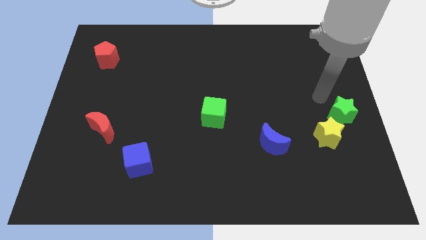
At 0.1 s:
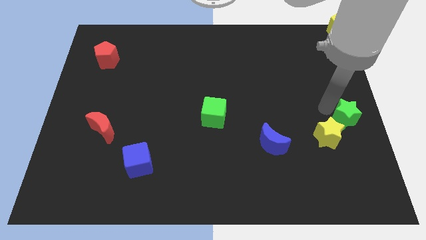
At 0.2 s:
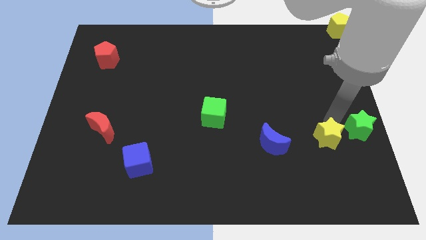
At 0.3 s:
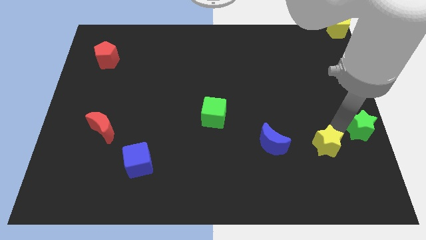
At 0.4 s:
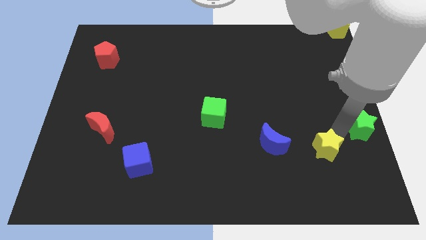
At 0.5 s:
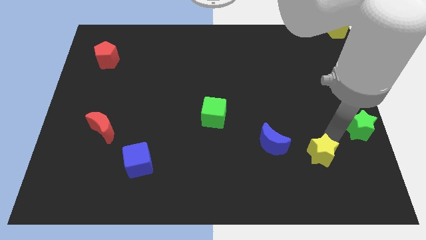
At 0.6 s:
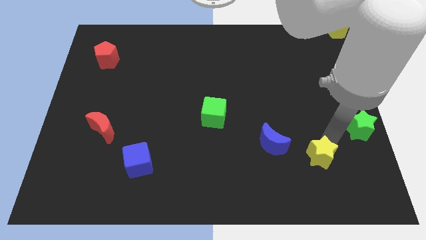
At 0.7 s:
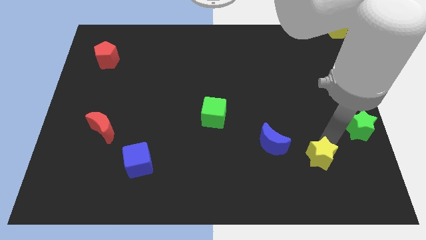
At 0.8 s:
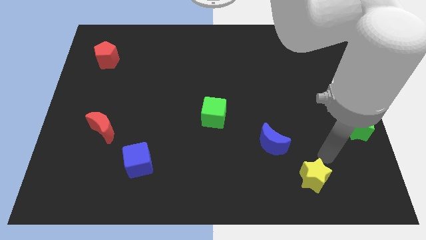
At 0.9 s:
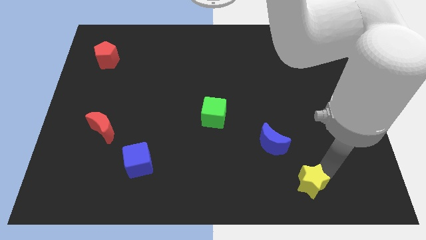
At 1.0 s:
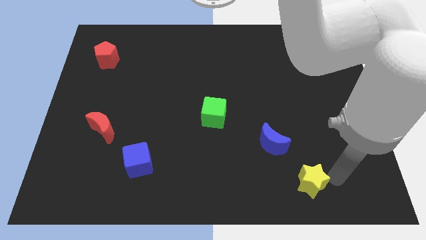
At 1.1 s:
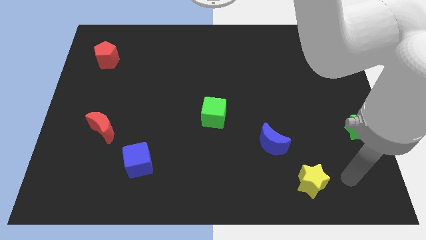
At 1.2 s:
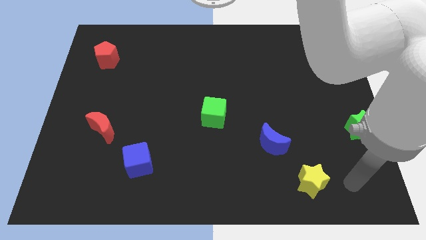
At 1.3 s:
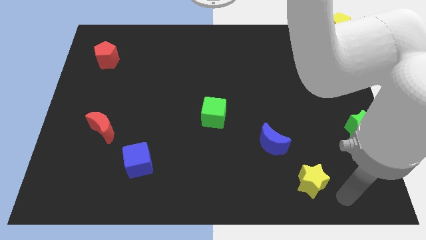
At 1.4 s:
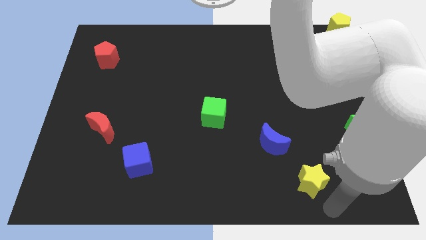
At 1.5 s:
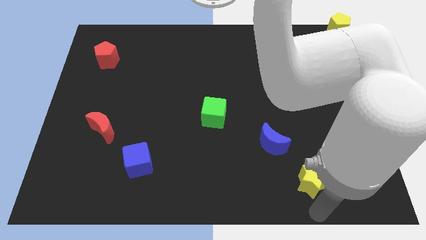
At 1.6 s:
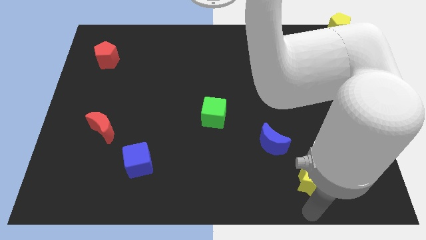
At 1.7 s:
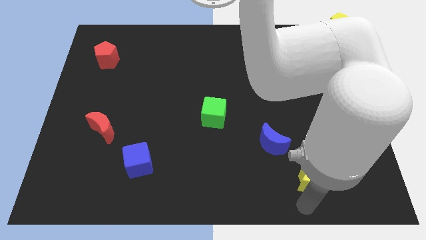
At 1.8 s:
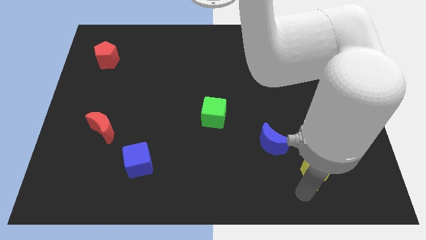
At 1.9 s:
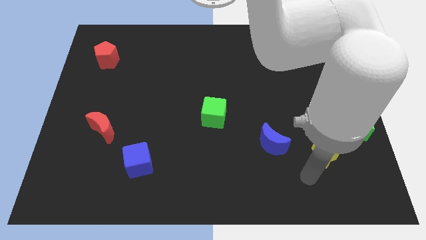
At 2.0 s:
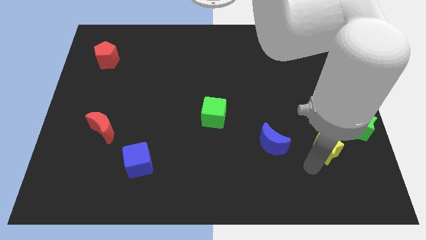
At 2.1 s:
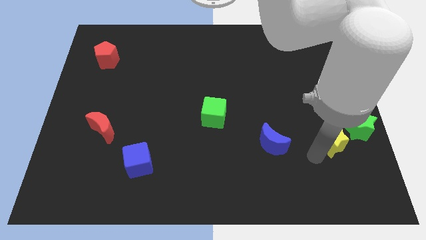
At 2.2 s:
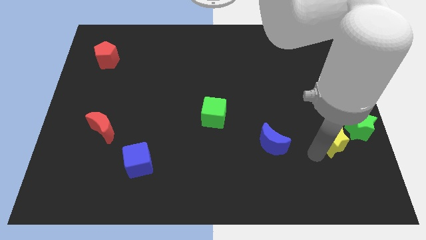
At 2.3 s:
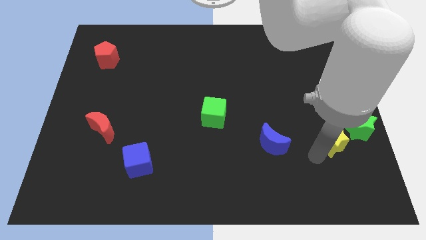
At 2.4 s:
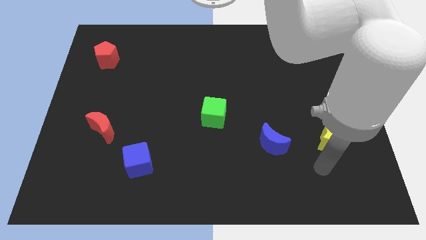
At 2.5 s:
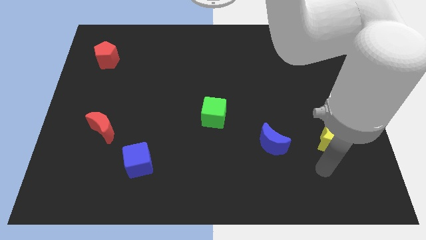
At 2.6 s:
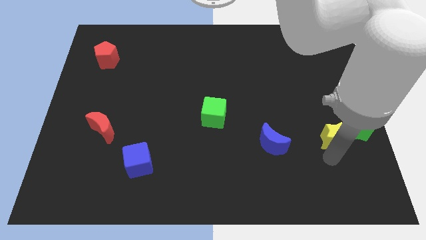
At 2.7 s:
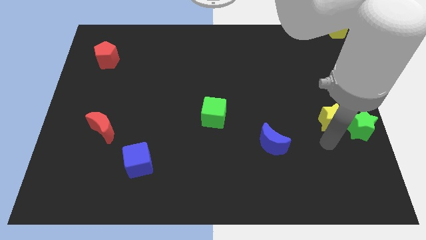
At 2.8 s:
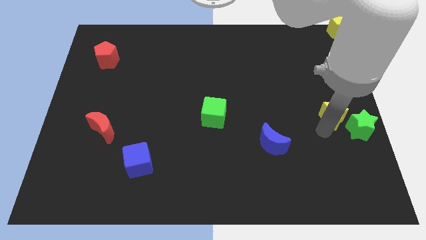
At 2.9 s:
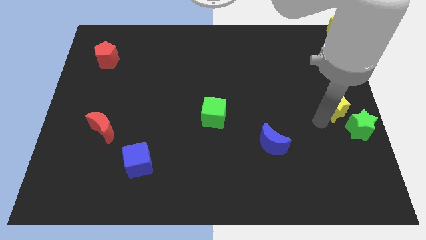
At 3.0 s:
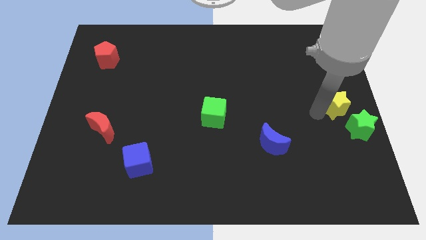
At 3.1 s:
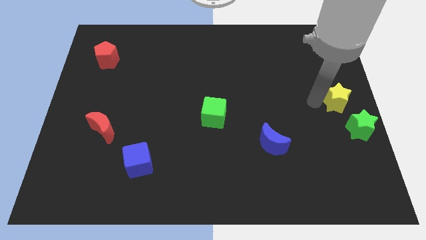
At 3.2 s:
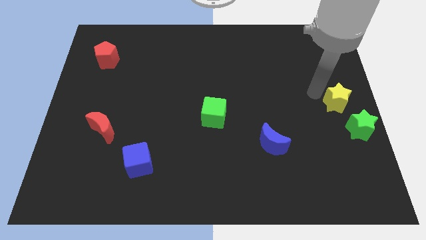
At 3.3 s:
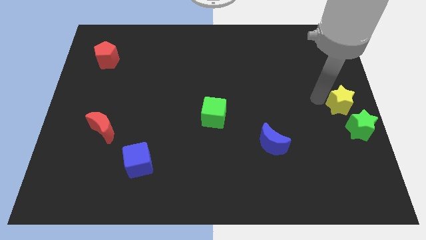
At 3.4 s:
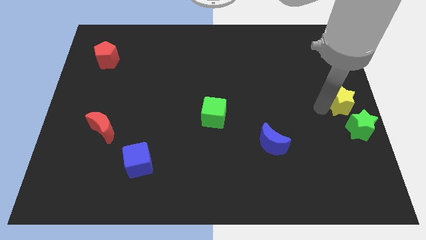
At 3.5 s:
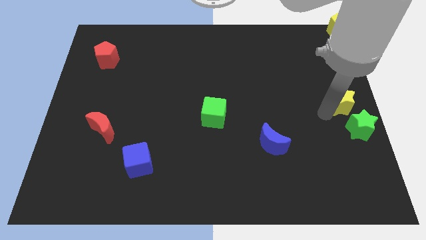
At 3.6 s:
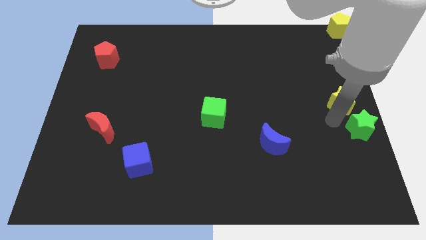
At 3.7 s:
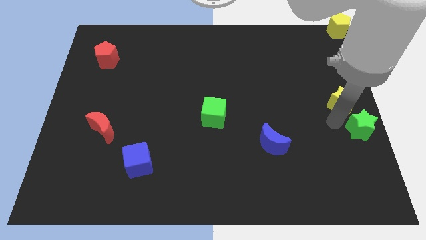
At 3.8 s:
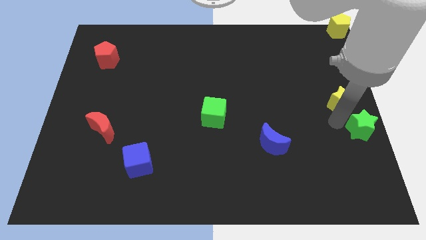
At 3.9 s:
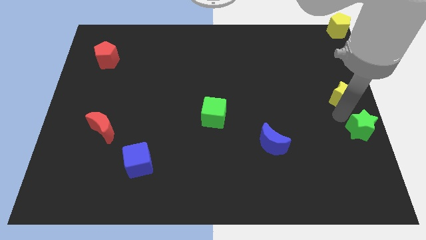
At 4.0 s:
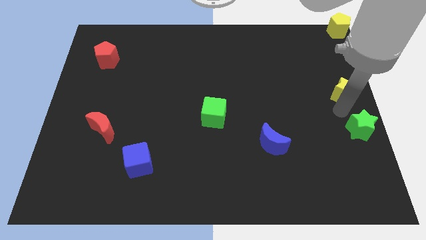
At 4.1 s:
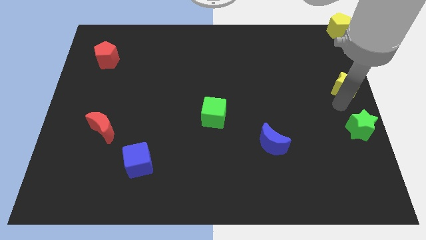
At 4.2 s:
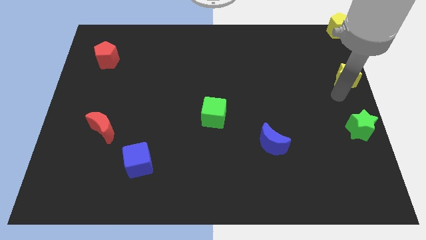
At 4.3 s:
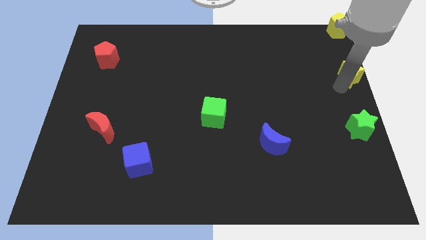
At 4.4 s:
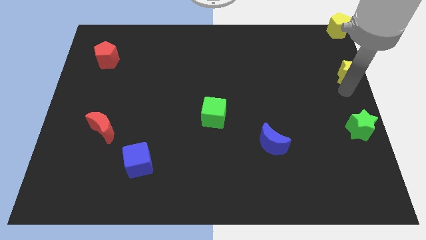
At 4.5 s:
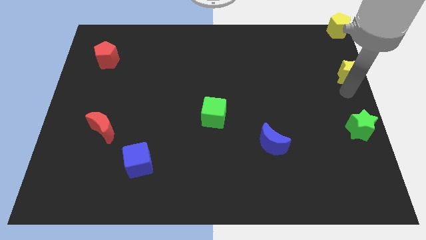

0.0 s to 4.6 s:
separate the yellow star from the green star

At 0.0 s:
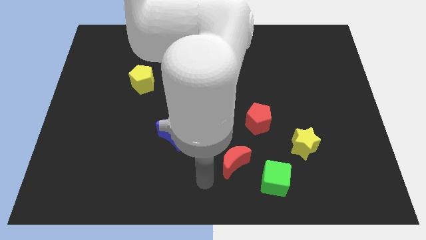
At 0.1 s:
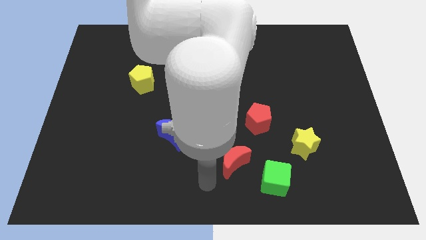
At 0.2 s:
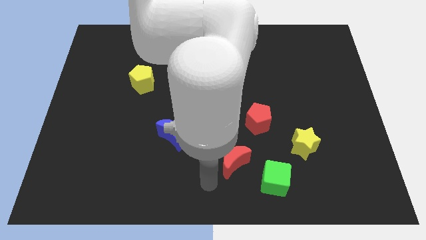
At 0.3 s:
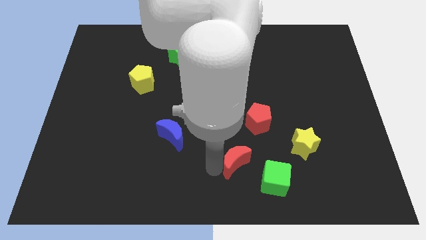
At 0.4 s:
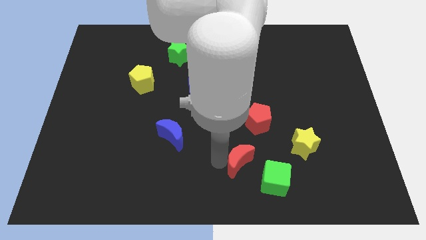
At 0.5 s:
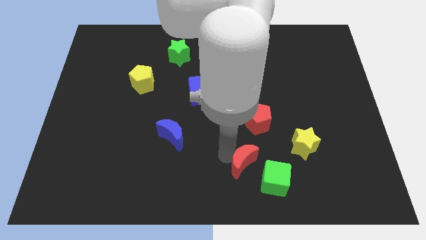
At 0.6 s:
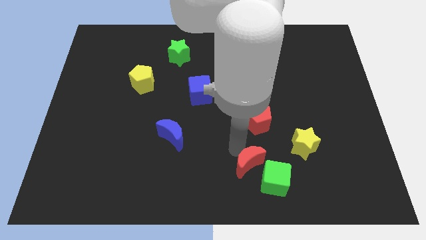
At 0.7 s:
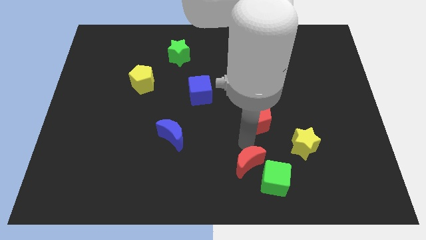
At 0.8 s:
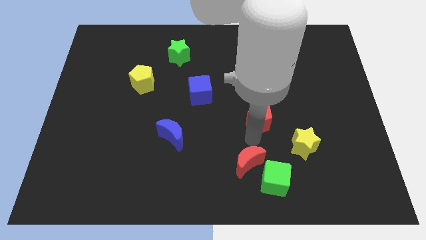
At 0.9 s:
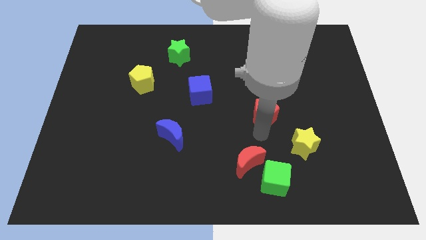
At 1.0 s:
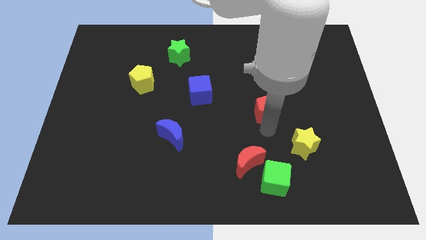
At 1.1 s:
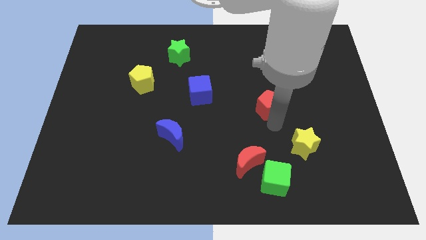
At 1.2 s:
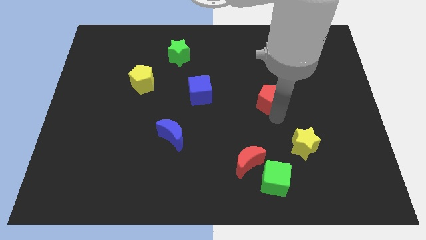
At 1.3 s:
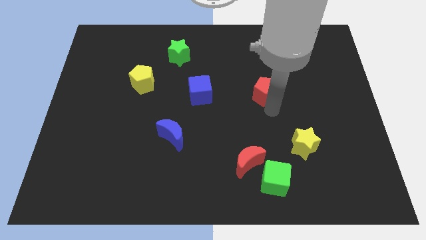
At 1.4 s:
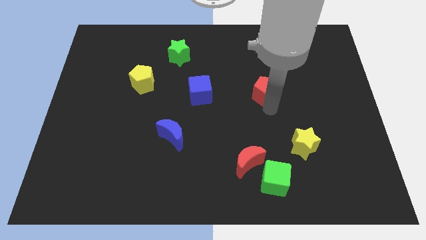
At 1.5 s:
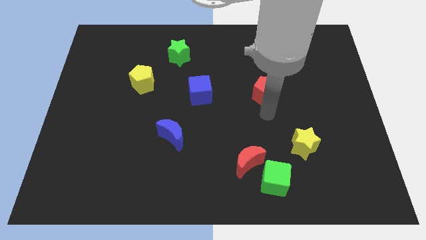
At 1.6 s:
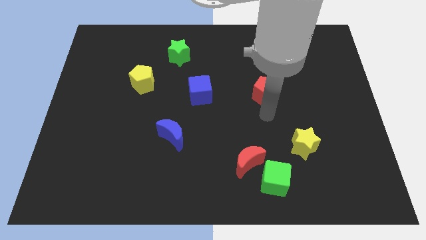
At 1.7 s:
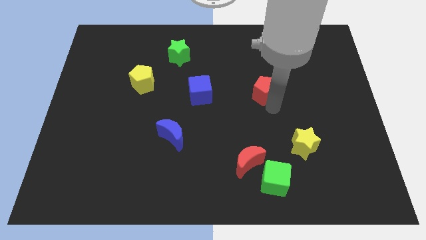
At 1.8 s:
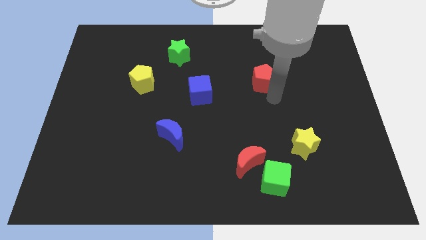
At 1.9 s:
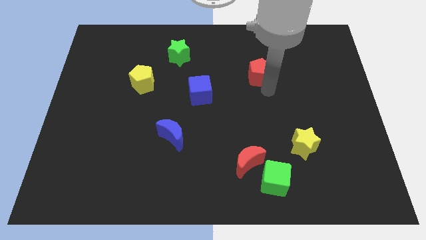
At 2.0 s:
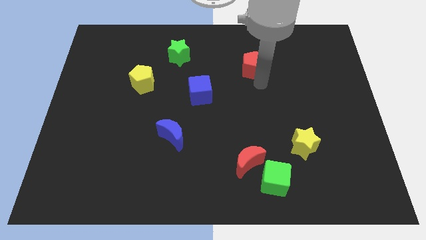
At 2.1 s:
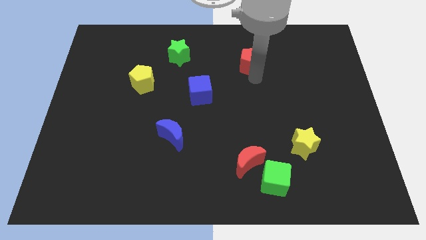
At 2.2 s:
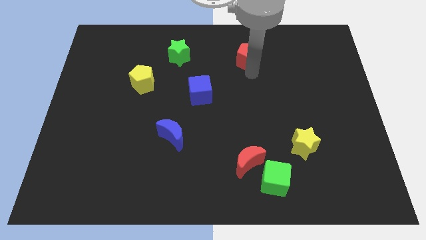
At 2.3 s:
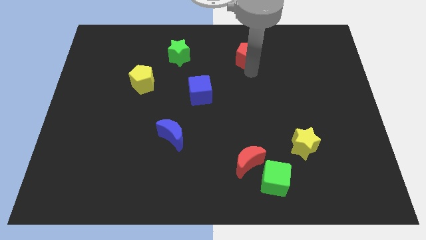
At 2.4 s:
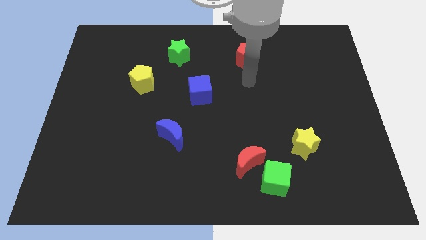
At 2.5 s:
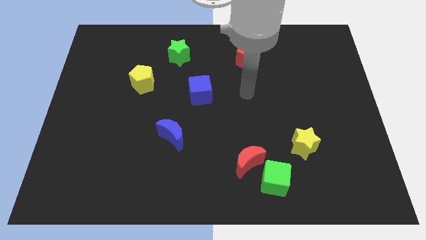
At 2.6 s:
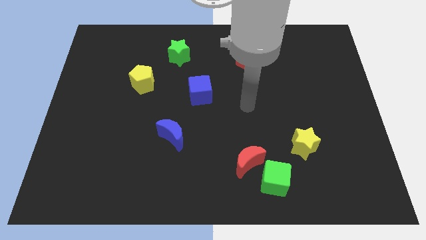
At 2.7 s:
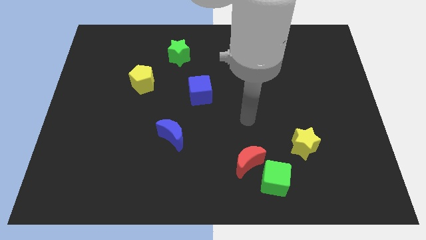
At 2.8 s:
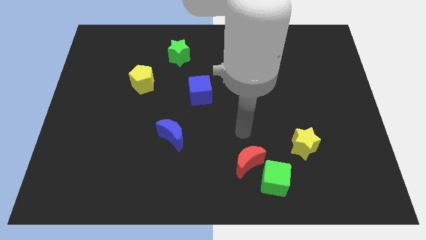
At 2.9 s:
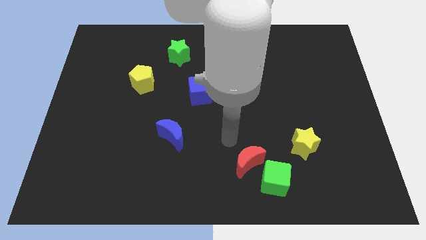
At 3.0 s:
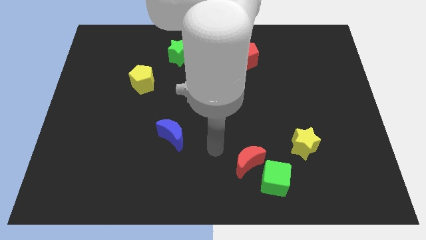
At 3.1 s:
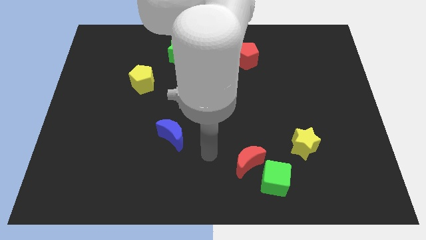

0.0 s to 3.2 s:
push the red pentagon vertically to the top side of the red crescent

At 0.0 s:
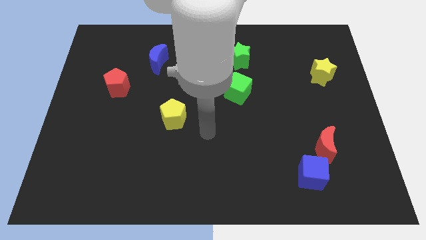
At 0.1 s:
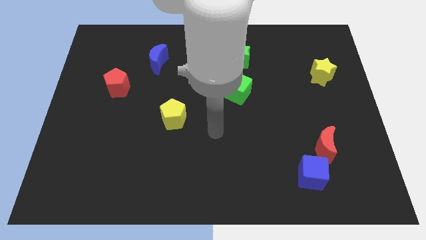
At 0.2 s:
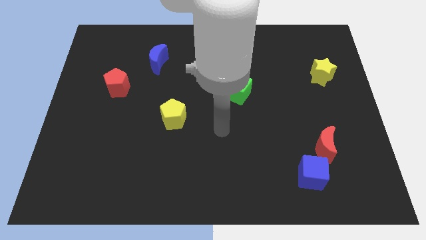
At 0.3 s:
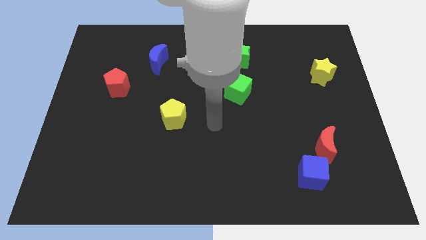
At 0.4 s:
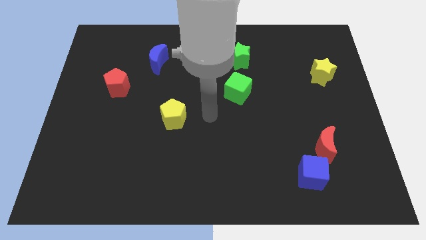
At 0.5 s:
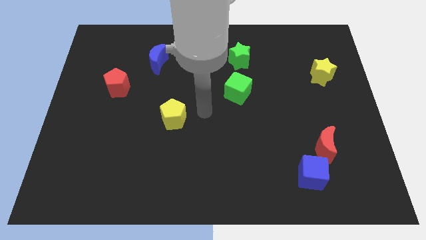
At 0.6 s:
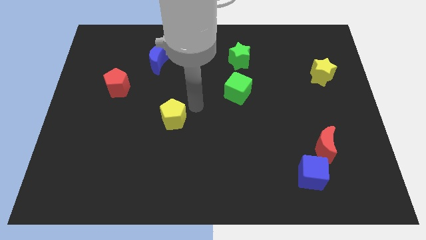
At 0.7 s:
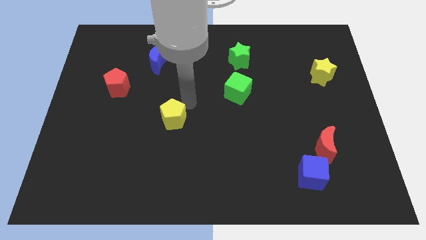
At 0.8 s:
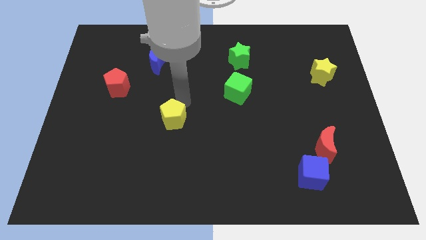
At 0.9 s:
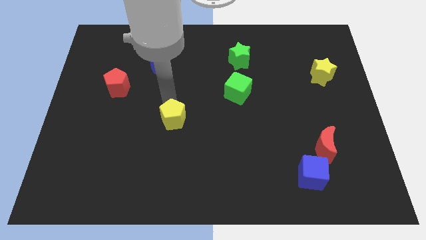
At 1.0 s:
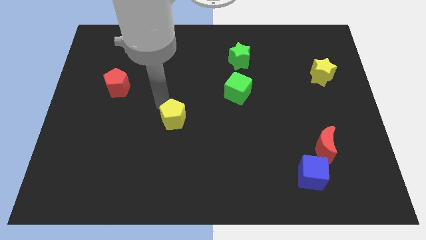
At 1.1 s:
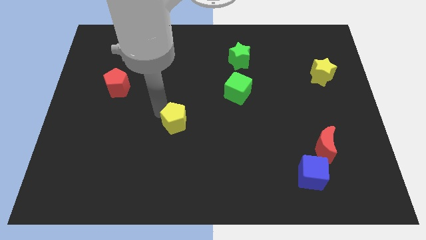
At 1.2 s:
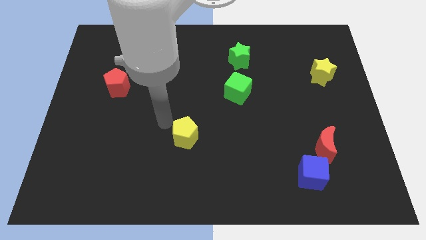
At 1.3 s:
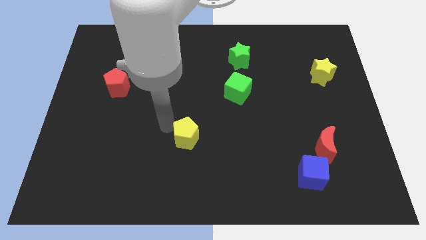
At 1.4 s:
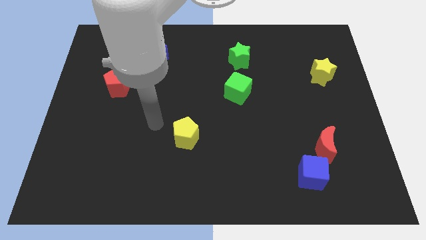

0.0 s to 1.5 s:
place the yellow pentagon diagonally to the bottom left side of the green cube
